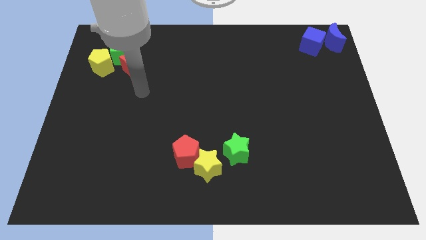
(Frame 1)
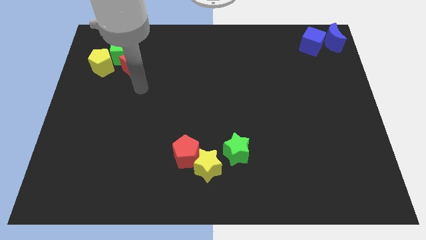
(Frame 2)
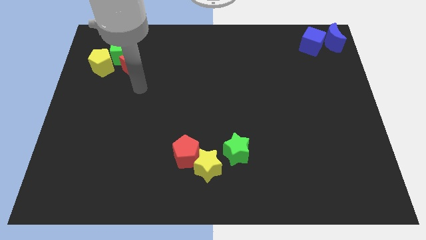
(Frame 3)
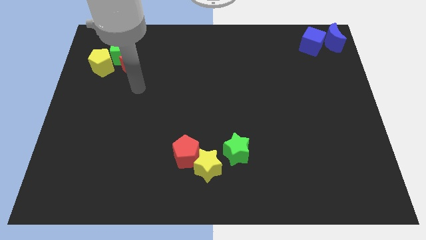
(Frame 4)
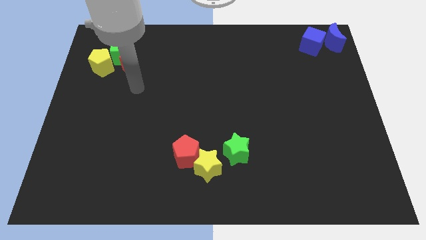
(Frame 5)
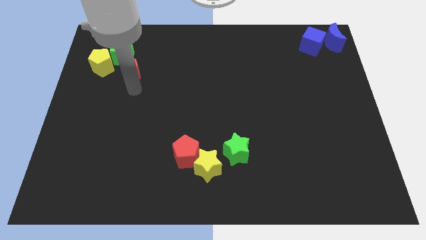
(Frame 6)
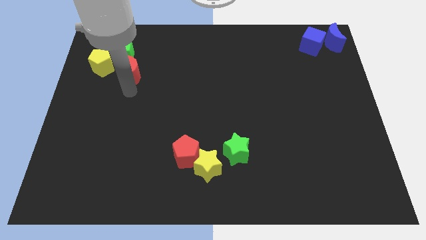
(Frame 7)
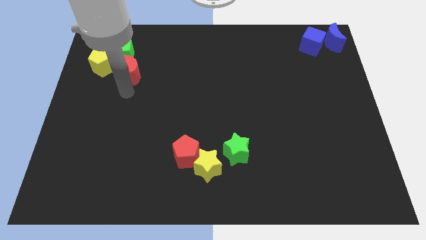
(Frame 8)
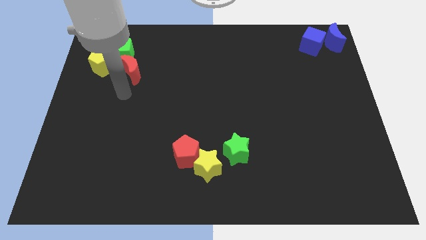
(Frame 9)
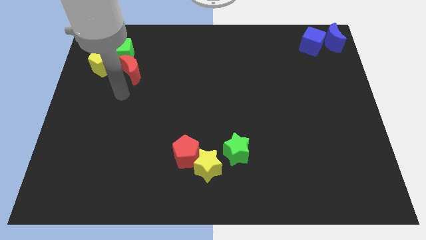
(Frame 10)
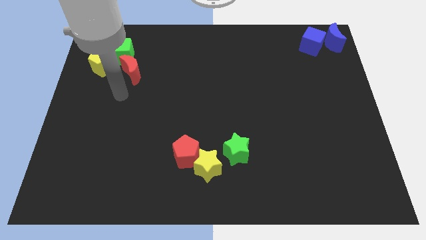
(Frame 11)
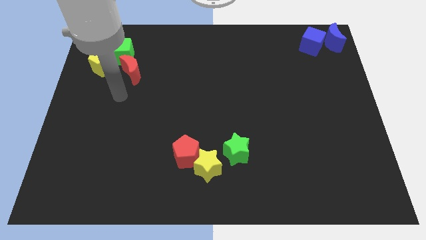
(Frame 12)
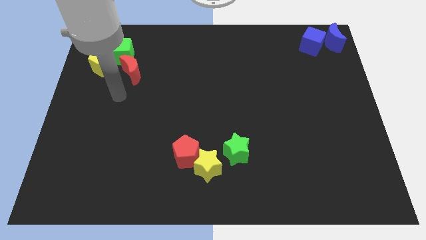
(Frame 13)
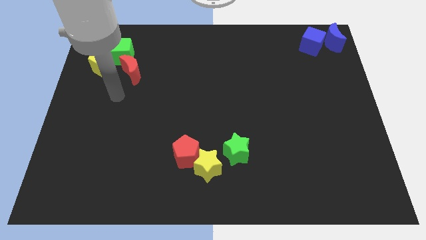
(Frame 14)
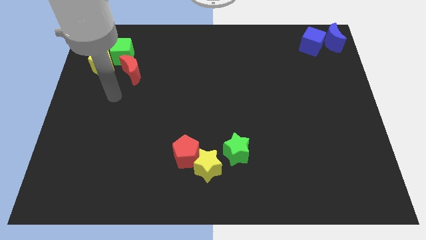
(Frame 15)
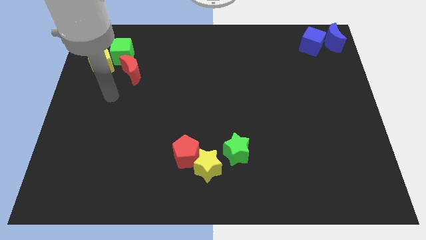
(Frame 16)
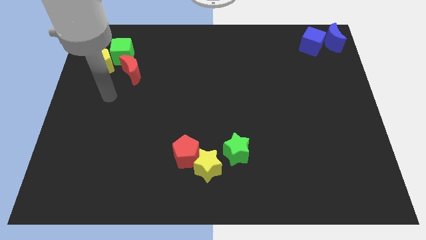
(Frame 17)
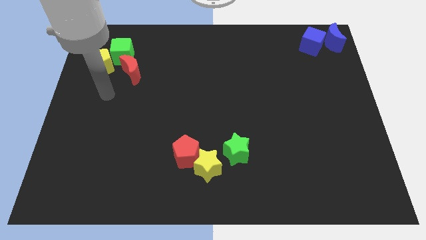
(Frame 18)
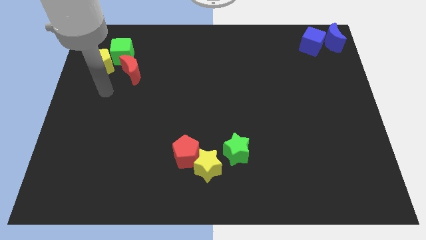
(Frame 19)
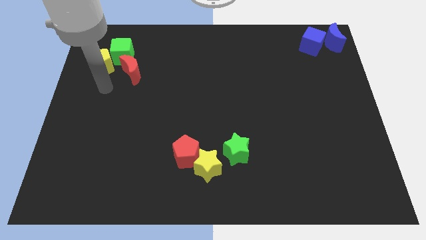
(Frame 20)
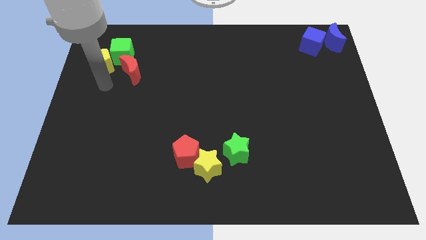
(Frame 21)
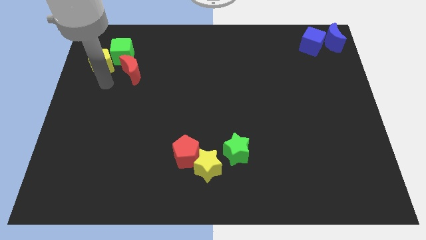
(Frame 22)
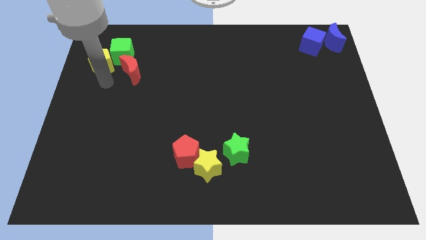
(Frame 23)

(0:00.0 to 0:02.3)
place your hand under the yellow pentagon

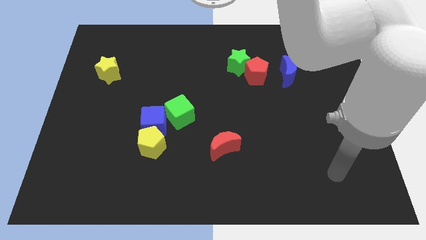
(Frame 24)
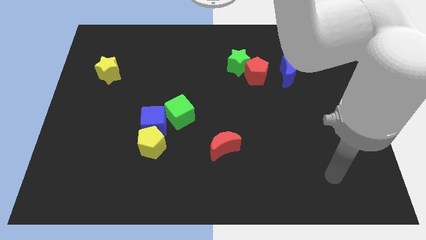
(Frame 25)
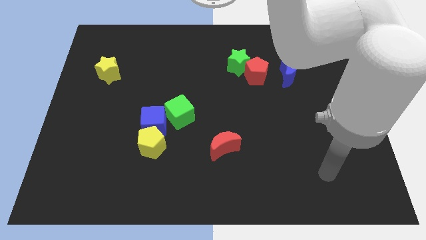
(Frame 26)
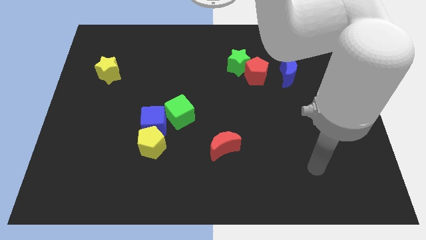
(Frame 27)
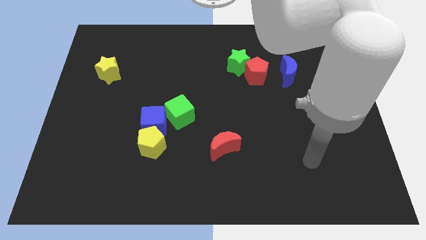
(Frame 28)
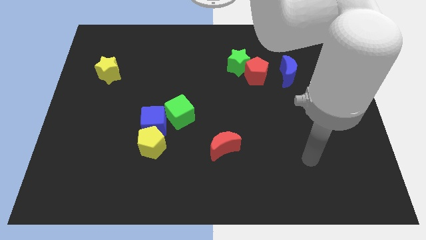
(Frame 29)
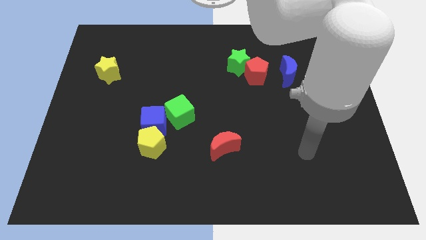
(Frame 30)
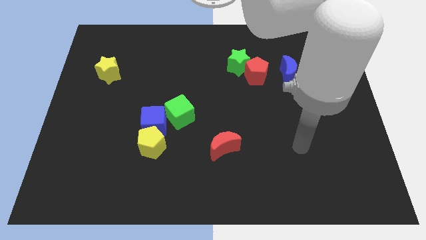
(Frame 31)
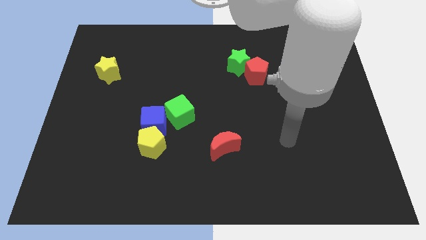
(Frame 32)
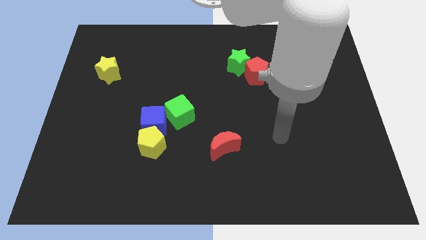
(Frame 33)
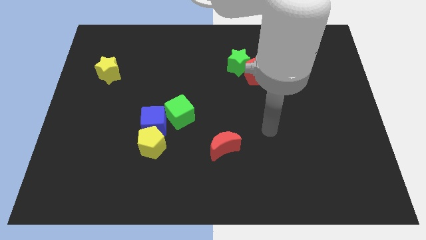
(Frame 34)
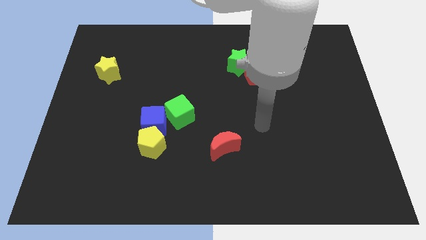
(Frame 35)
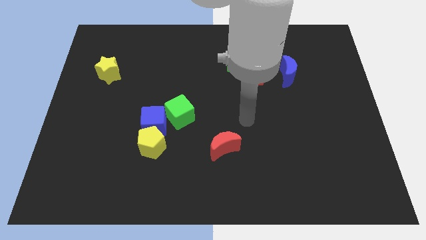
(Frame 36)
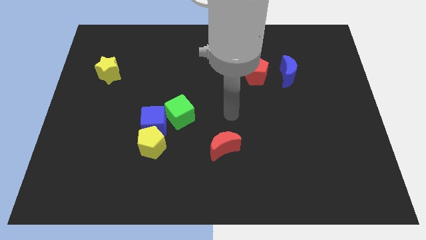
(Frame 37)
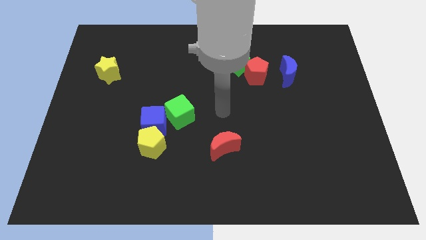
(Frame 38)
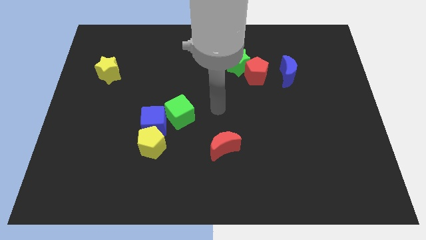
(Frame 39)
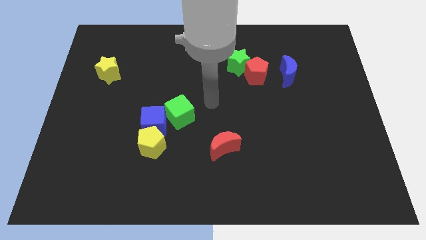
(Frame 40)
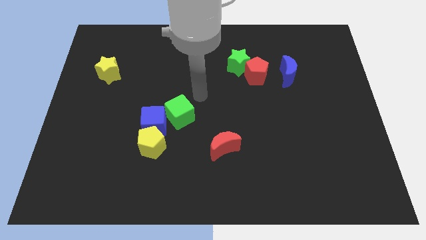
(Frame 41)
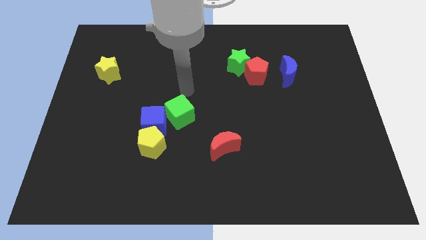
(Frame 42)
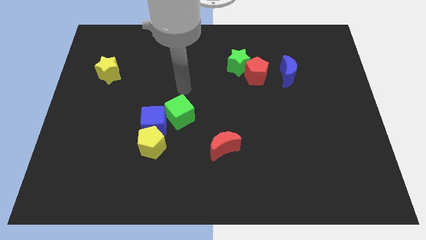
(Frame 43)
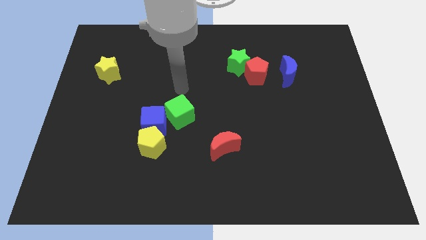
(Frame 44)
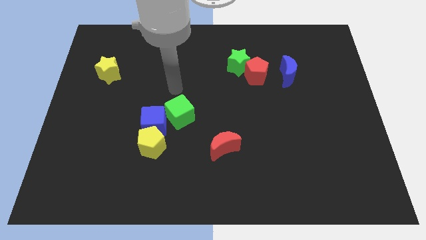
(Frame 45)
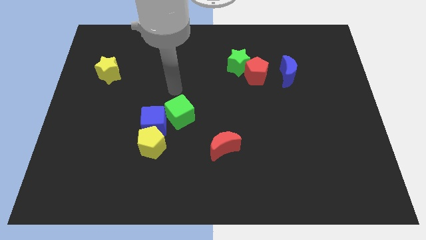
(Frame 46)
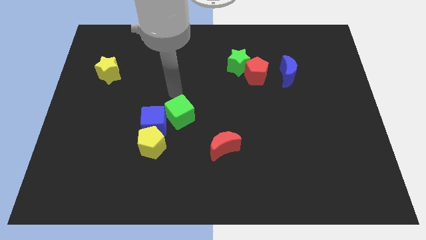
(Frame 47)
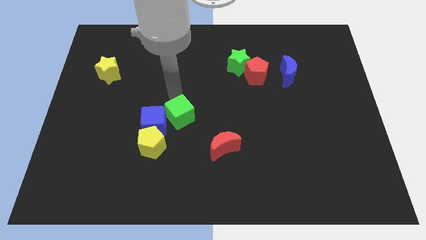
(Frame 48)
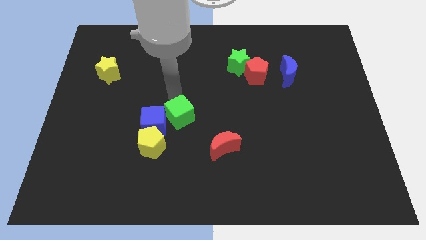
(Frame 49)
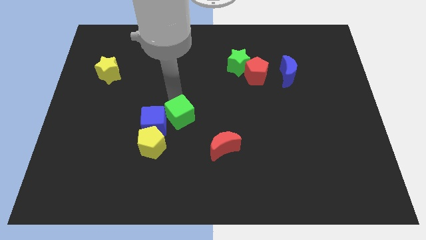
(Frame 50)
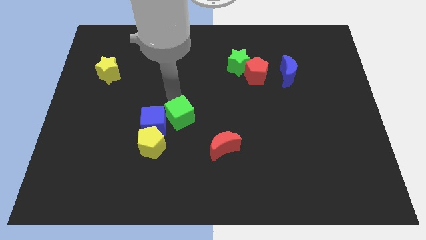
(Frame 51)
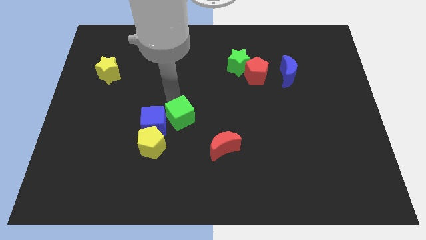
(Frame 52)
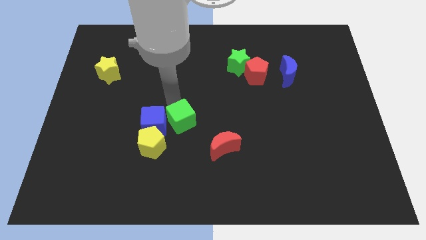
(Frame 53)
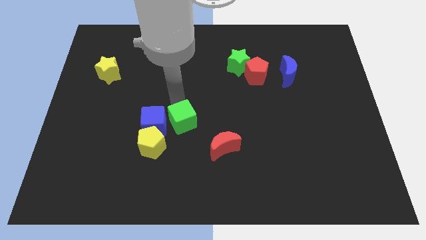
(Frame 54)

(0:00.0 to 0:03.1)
slide green cube slightly down

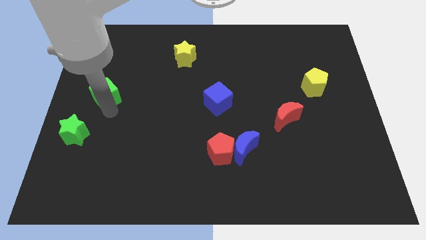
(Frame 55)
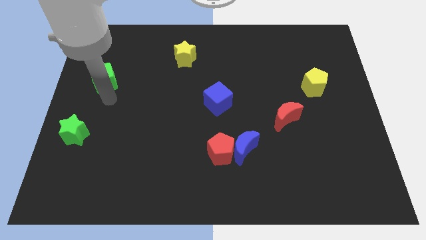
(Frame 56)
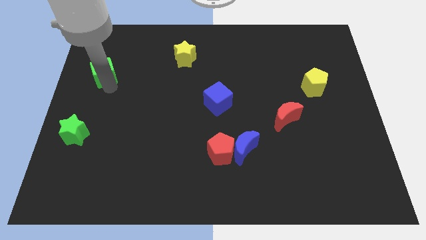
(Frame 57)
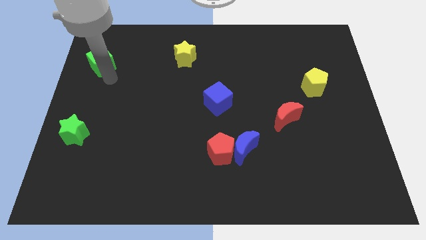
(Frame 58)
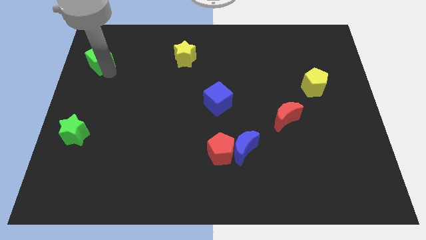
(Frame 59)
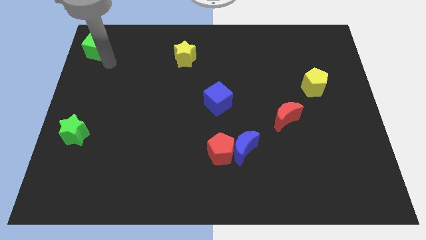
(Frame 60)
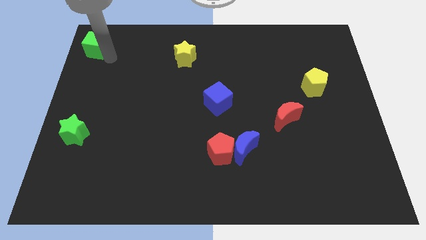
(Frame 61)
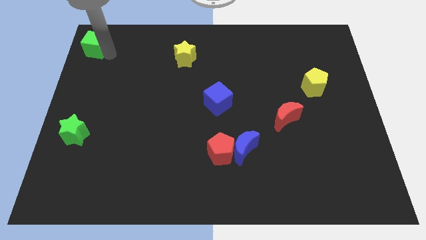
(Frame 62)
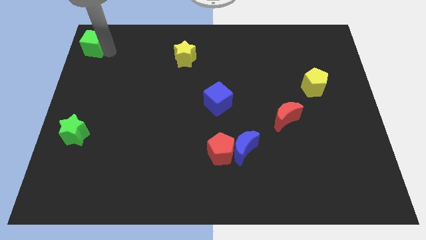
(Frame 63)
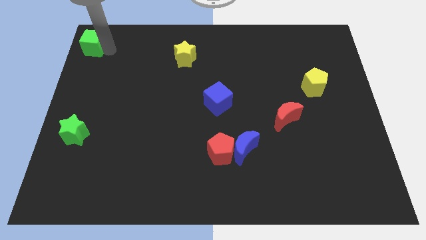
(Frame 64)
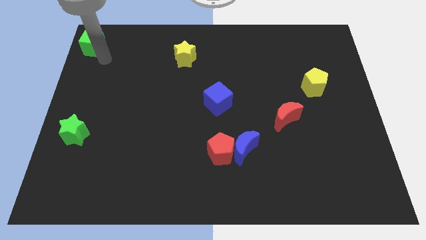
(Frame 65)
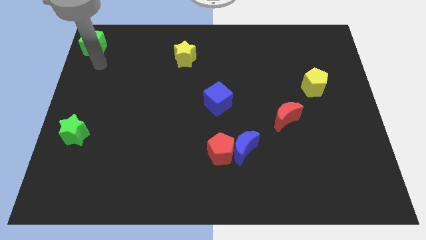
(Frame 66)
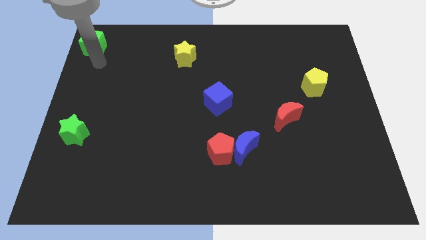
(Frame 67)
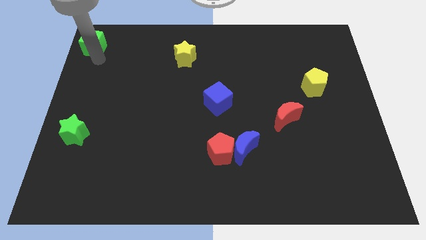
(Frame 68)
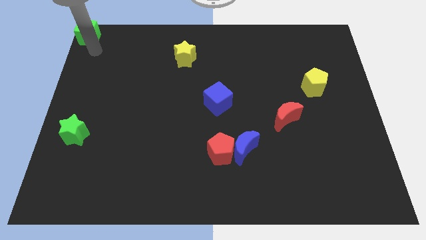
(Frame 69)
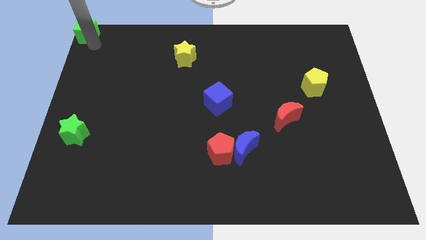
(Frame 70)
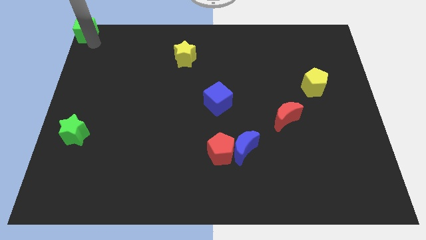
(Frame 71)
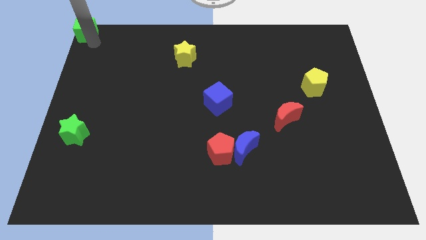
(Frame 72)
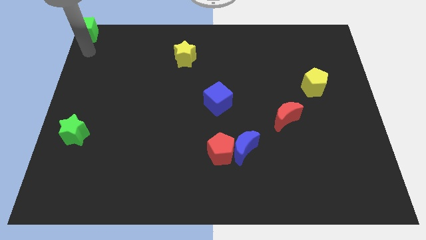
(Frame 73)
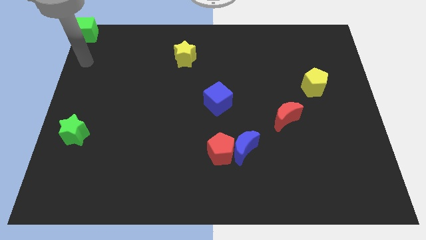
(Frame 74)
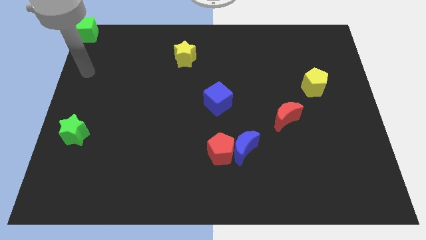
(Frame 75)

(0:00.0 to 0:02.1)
push the green cube to the top left corner

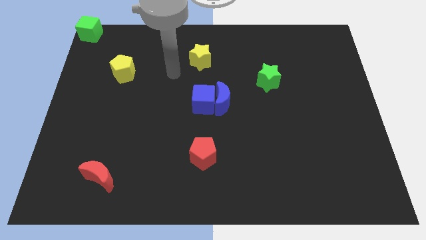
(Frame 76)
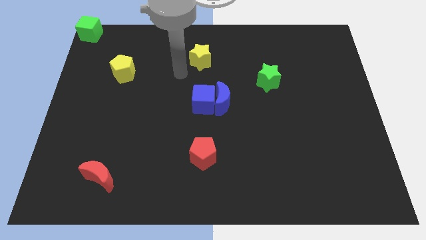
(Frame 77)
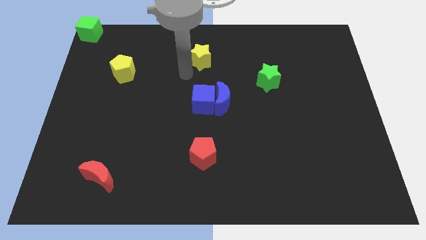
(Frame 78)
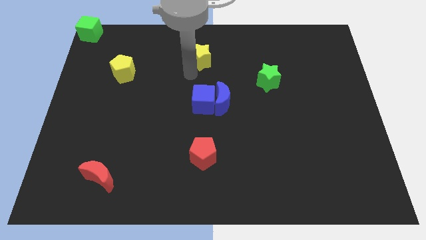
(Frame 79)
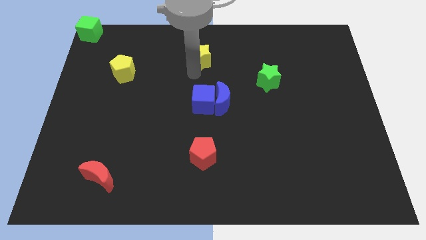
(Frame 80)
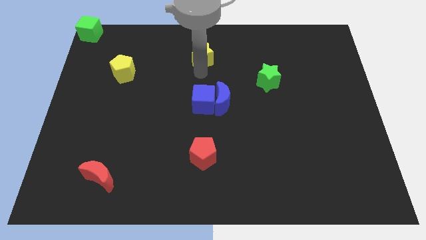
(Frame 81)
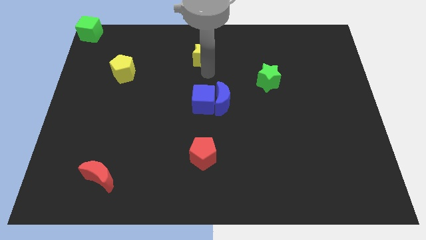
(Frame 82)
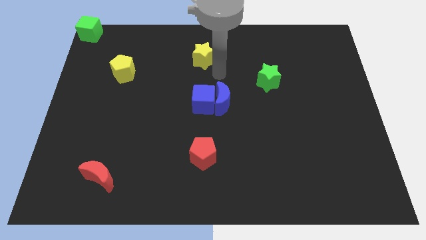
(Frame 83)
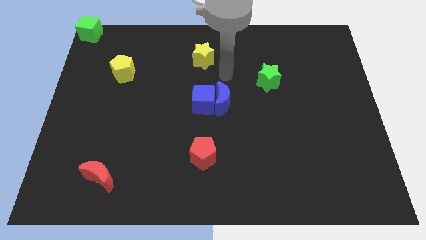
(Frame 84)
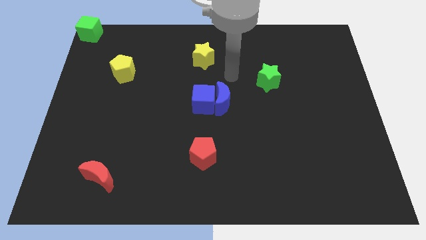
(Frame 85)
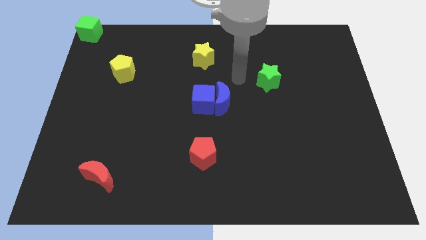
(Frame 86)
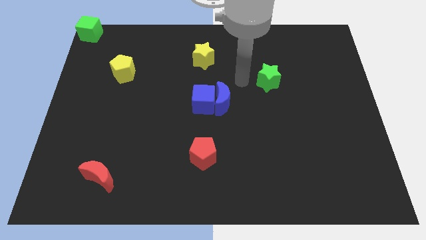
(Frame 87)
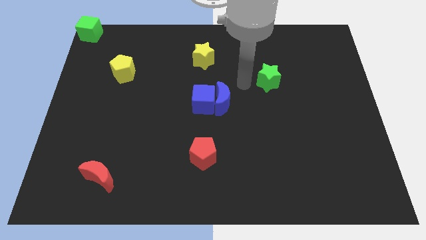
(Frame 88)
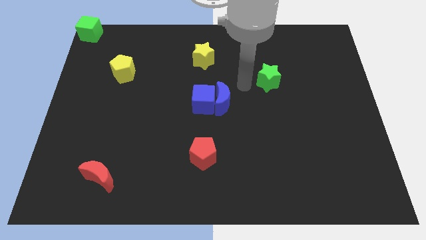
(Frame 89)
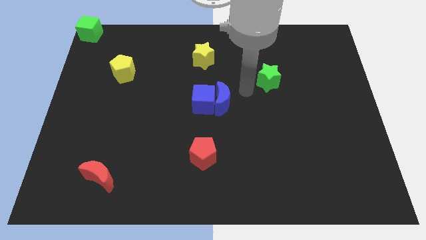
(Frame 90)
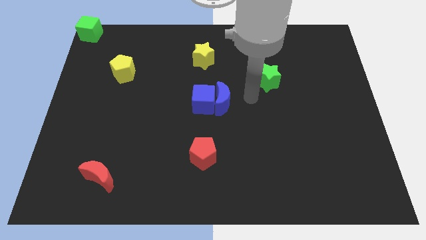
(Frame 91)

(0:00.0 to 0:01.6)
place your arm to the left of the green star
